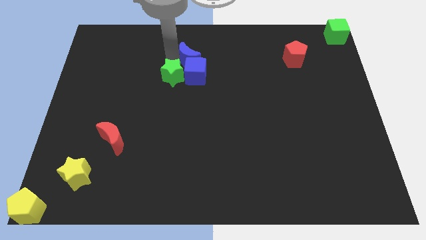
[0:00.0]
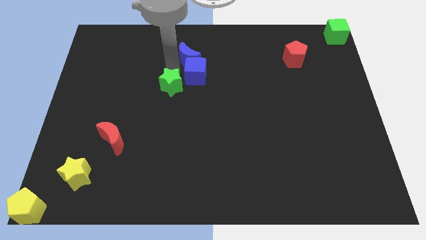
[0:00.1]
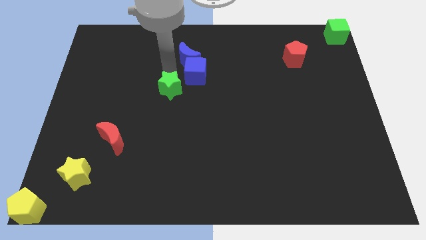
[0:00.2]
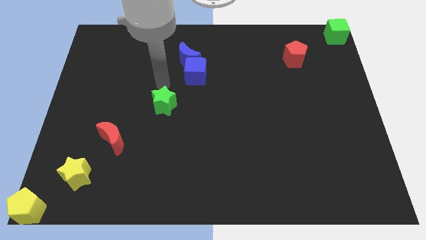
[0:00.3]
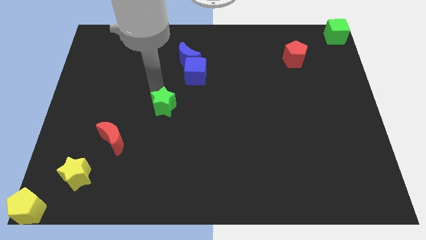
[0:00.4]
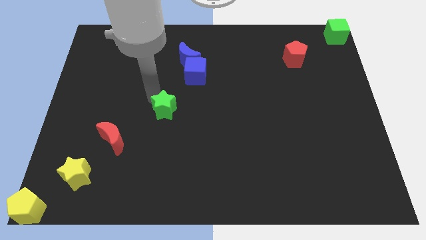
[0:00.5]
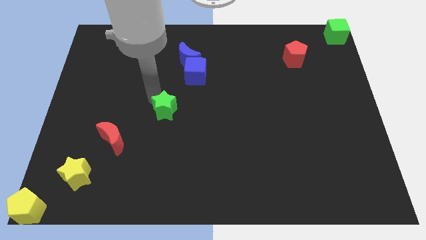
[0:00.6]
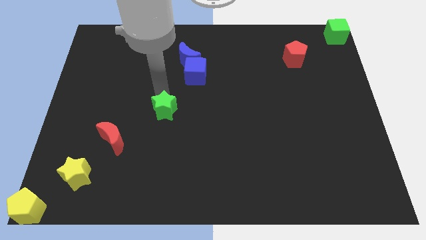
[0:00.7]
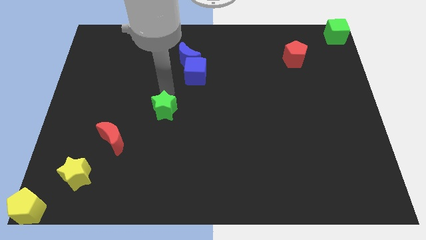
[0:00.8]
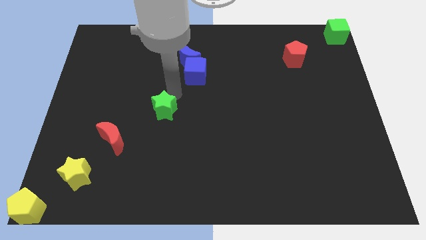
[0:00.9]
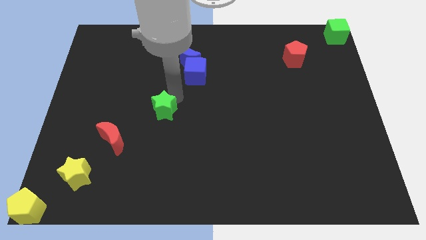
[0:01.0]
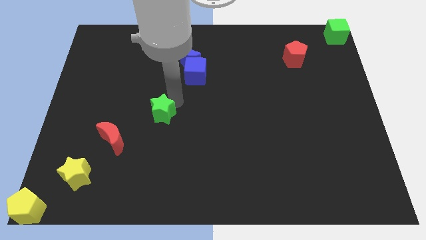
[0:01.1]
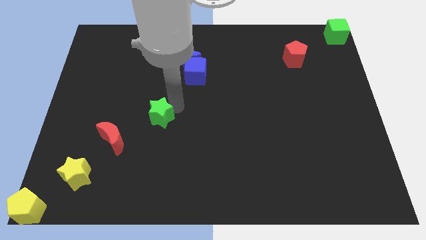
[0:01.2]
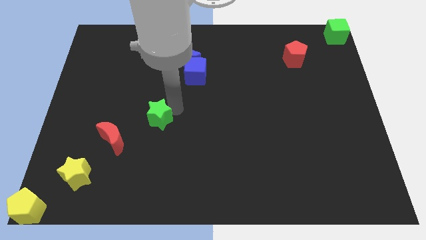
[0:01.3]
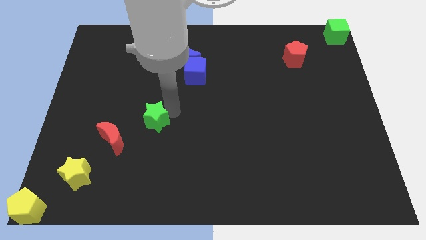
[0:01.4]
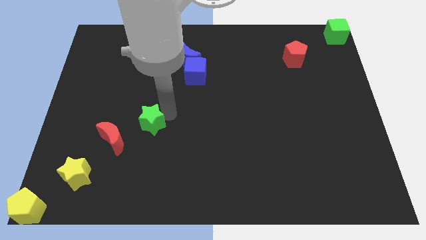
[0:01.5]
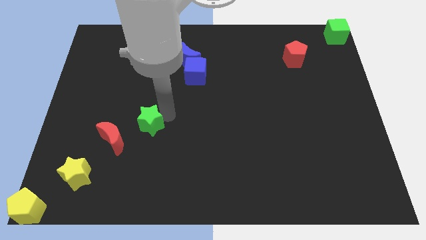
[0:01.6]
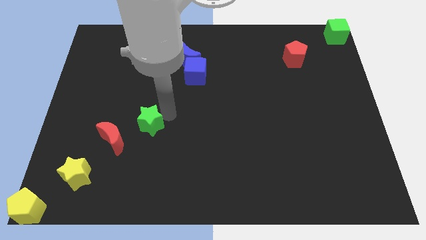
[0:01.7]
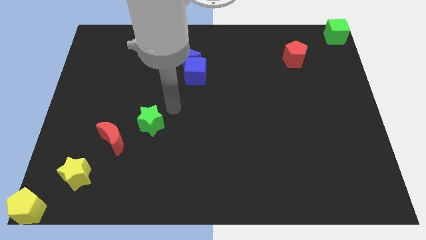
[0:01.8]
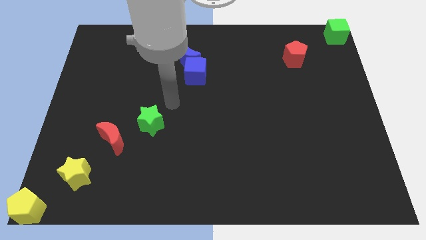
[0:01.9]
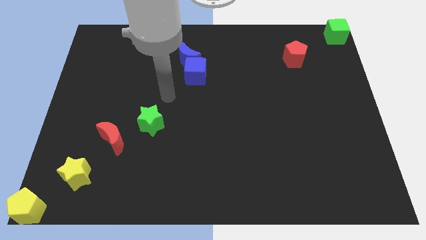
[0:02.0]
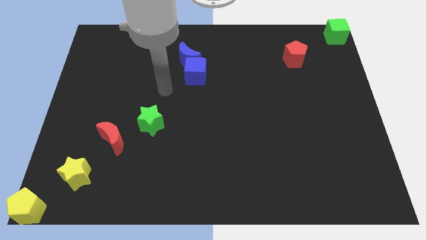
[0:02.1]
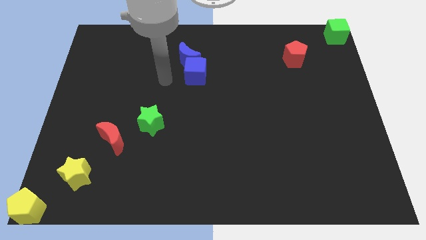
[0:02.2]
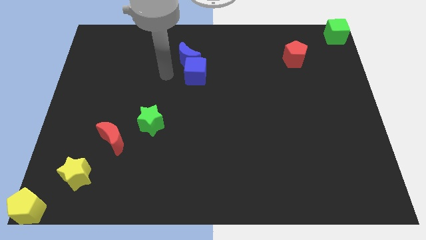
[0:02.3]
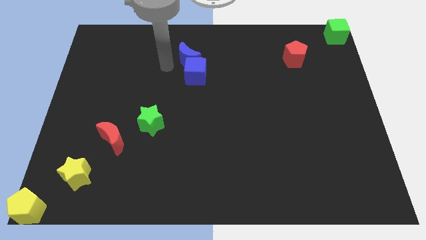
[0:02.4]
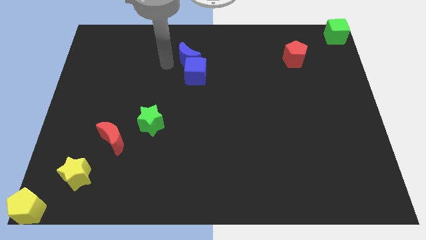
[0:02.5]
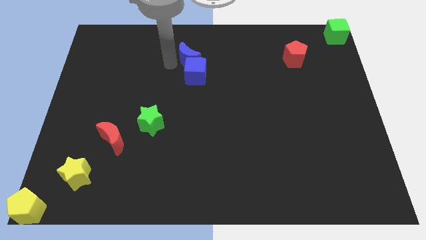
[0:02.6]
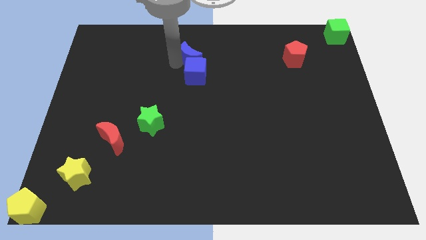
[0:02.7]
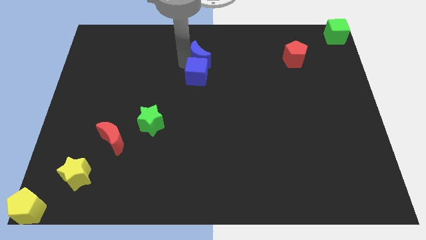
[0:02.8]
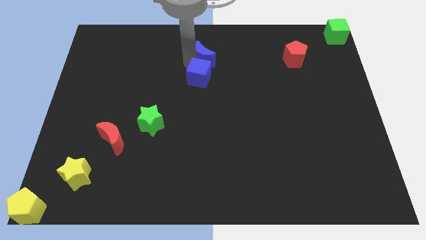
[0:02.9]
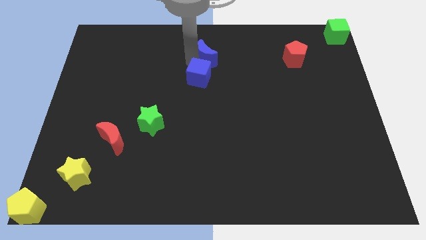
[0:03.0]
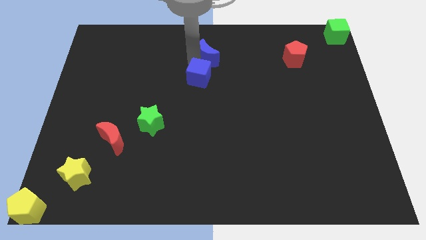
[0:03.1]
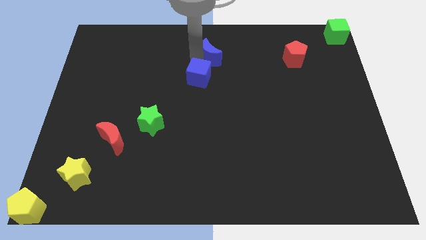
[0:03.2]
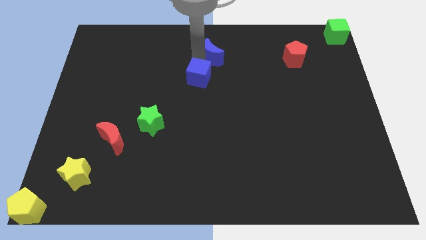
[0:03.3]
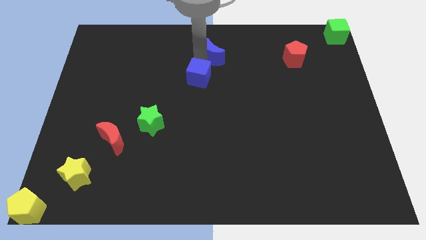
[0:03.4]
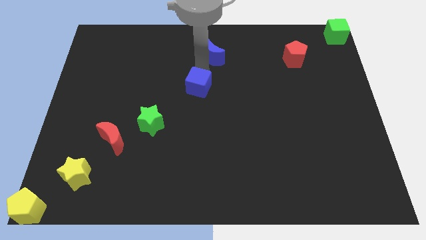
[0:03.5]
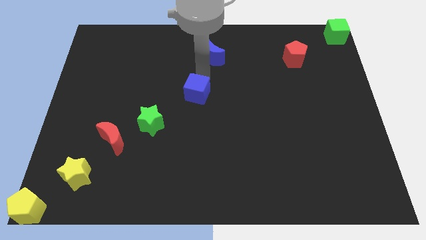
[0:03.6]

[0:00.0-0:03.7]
place the green star and blue cube diagonally on the top right side of the red crescent

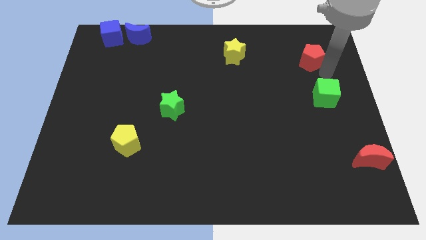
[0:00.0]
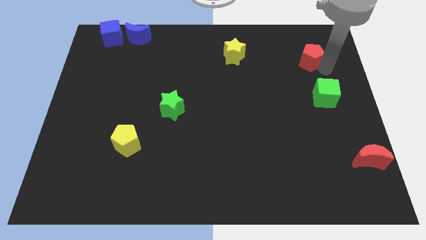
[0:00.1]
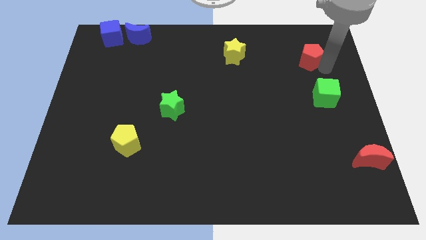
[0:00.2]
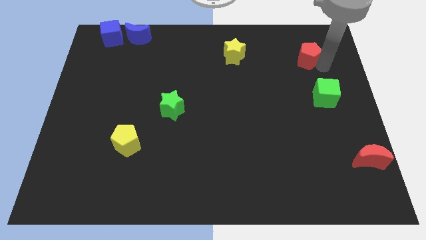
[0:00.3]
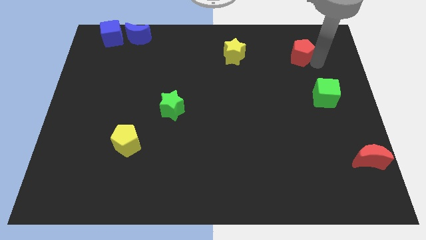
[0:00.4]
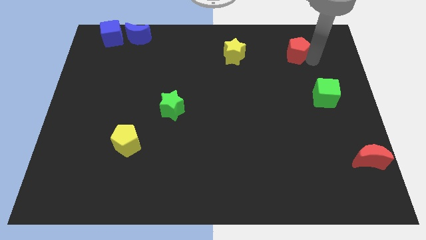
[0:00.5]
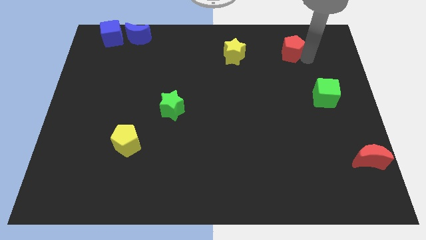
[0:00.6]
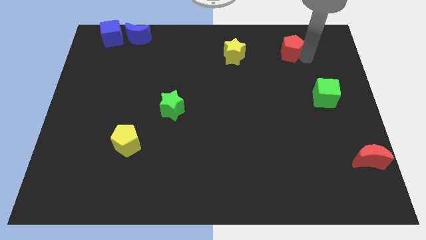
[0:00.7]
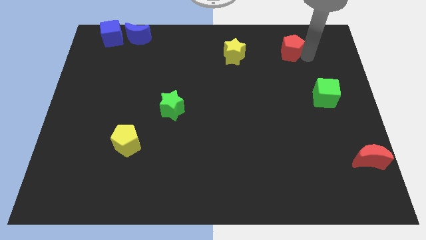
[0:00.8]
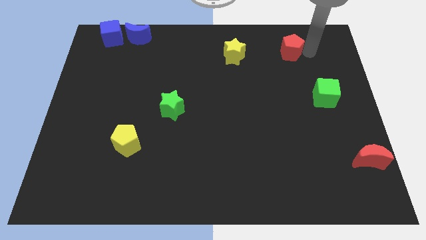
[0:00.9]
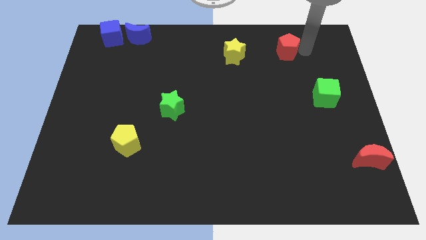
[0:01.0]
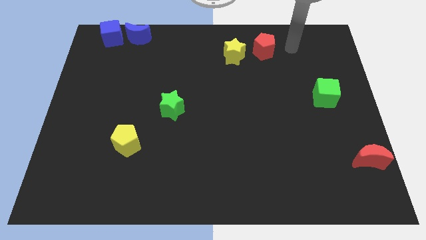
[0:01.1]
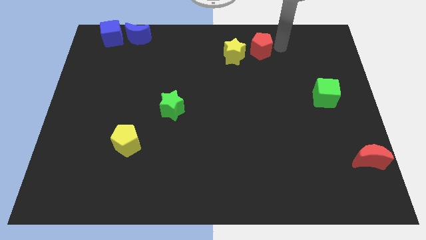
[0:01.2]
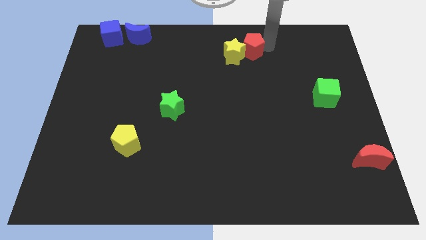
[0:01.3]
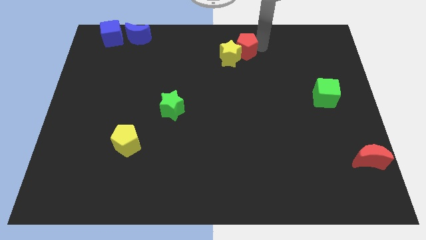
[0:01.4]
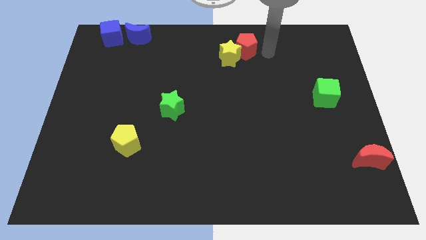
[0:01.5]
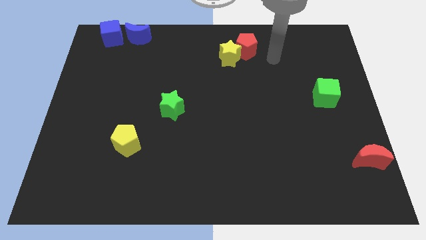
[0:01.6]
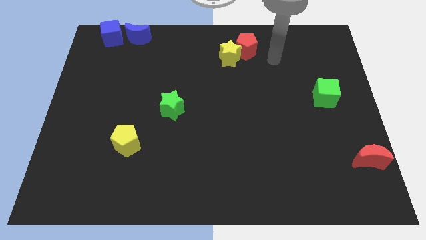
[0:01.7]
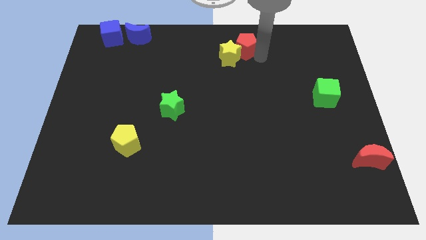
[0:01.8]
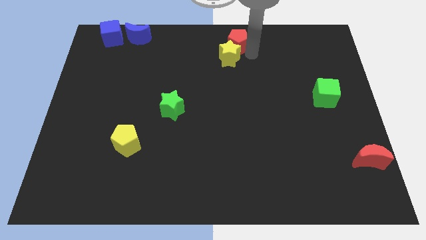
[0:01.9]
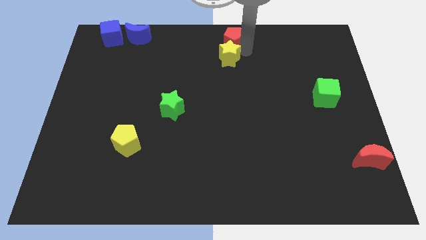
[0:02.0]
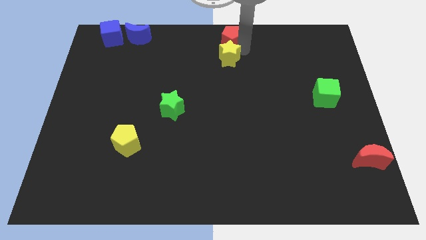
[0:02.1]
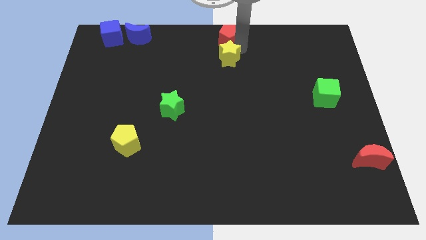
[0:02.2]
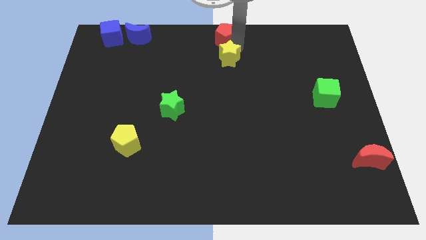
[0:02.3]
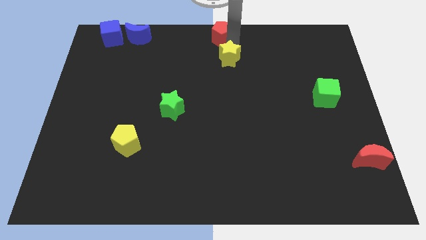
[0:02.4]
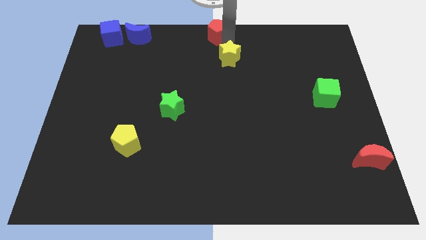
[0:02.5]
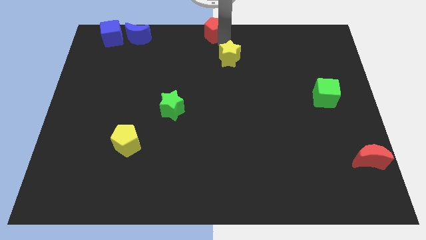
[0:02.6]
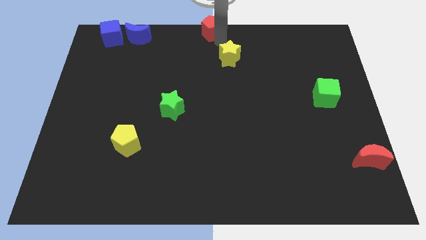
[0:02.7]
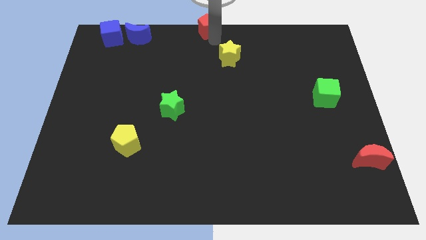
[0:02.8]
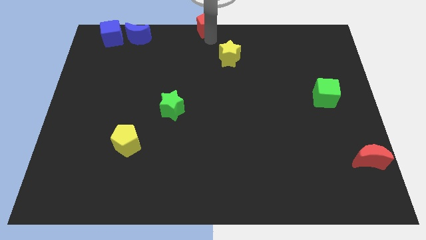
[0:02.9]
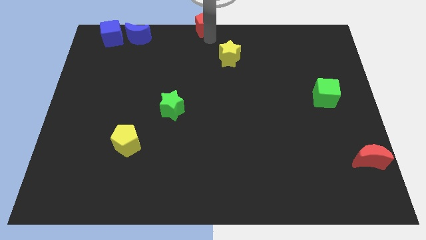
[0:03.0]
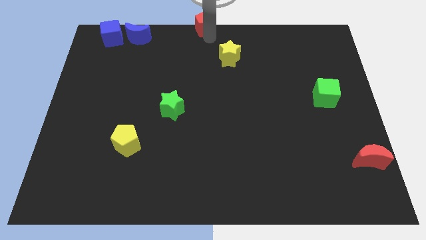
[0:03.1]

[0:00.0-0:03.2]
move red pentagon at center top

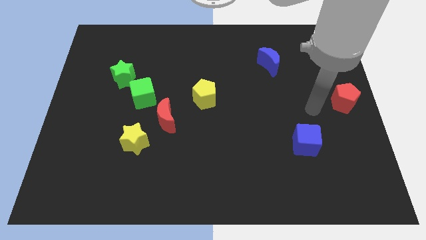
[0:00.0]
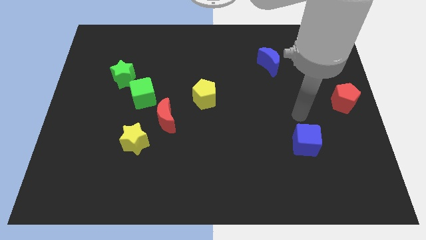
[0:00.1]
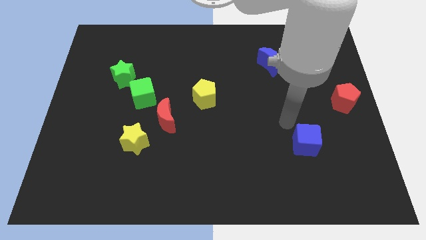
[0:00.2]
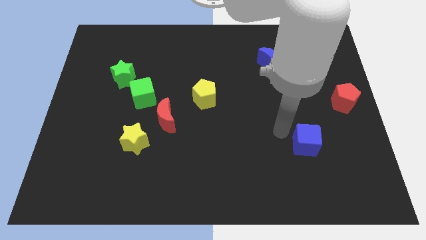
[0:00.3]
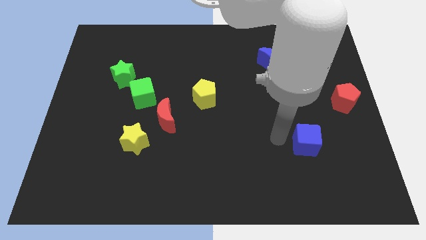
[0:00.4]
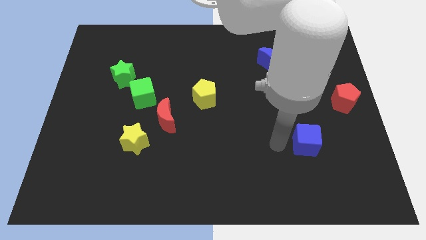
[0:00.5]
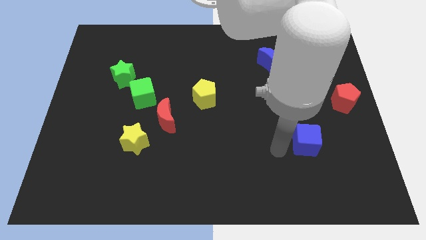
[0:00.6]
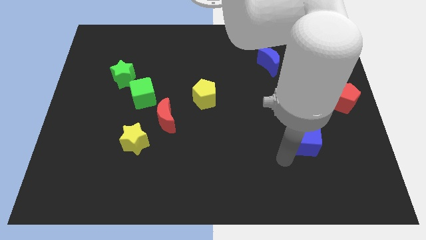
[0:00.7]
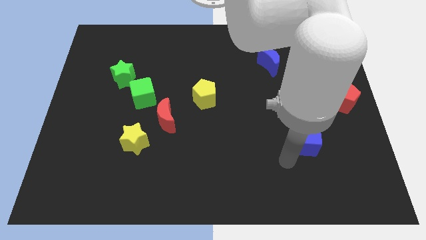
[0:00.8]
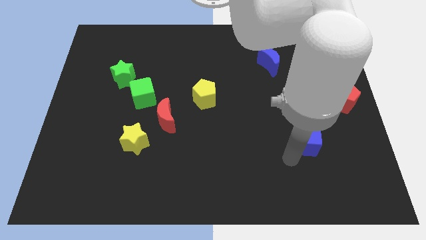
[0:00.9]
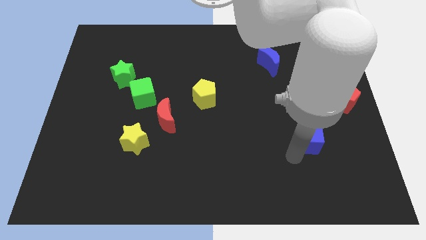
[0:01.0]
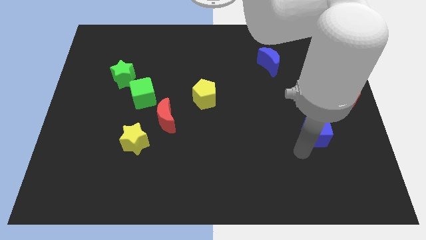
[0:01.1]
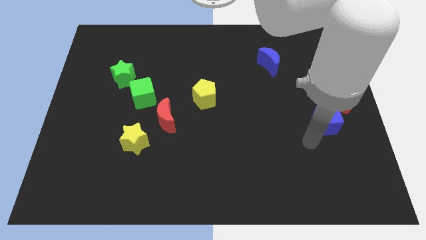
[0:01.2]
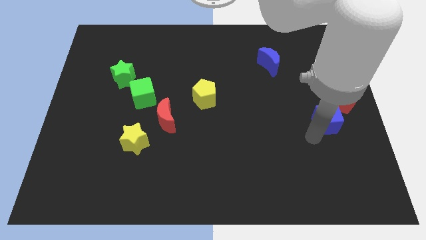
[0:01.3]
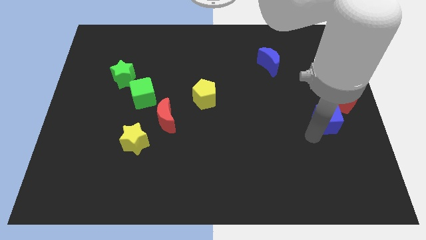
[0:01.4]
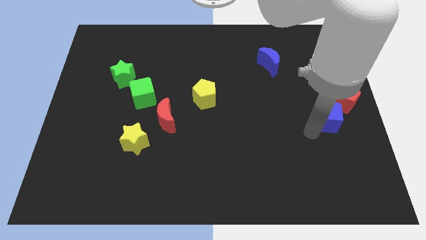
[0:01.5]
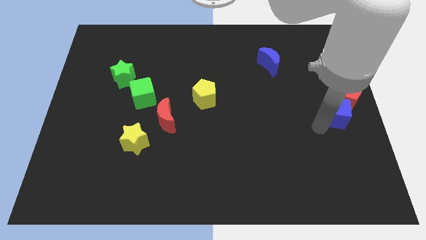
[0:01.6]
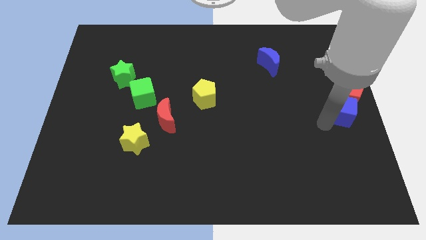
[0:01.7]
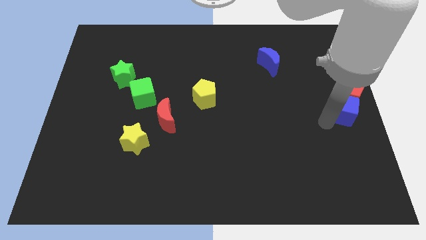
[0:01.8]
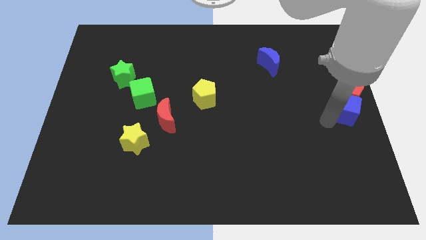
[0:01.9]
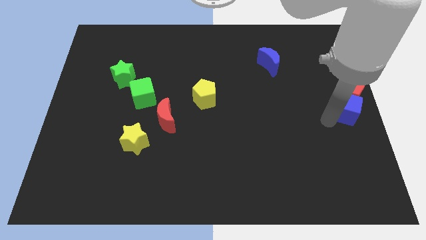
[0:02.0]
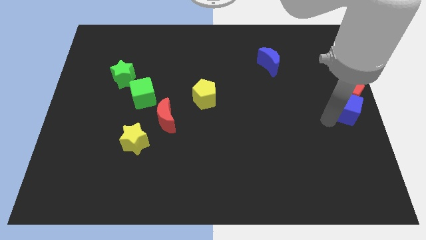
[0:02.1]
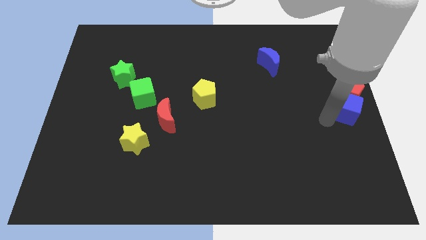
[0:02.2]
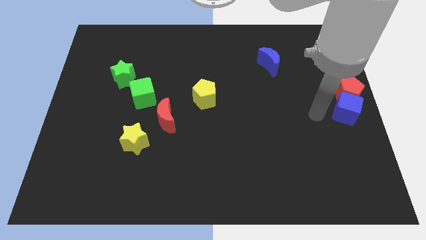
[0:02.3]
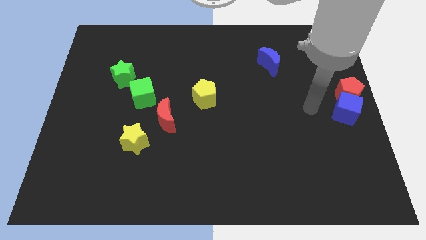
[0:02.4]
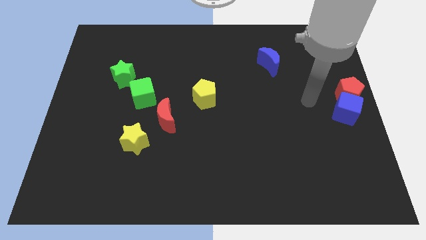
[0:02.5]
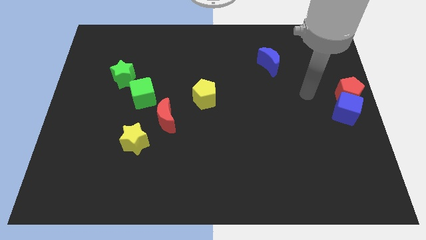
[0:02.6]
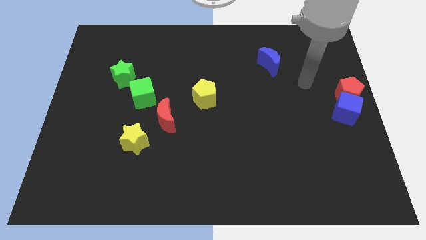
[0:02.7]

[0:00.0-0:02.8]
push the blue cube below the red pentagon
